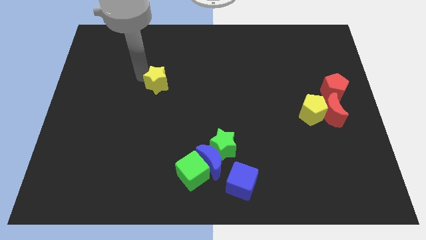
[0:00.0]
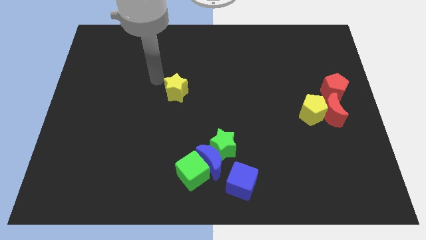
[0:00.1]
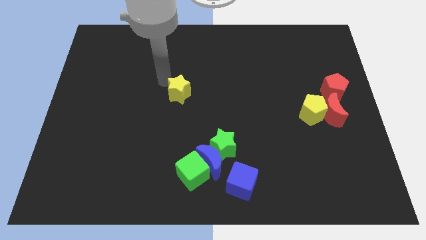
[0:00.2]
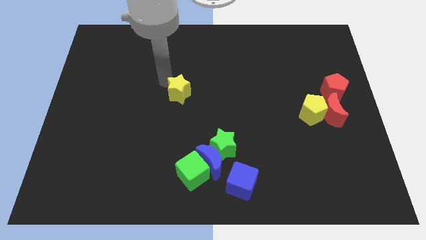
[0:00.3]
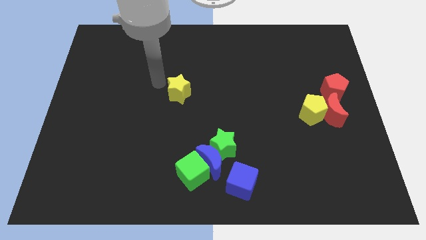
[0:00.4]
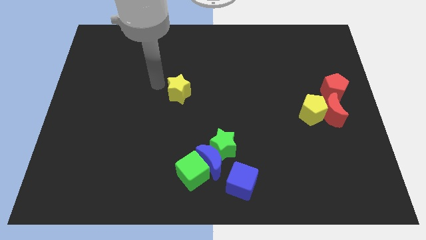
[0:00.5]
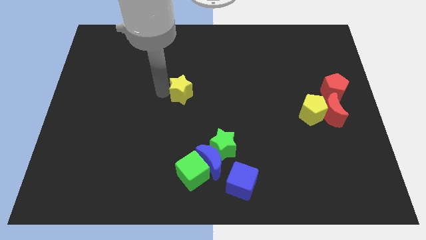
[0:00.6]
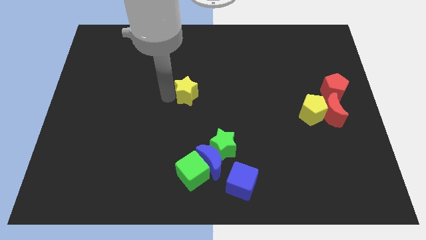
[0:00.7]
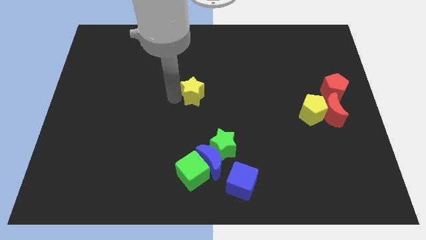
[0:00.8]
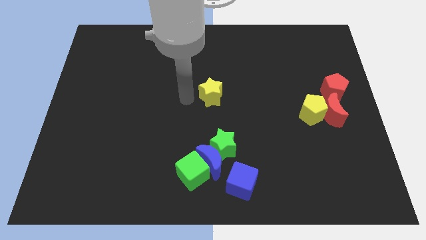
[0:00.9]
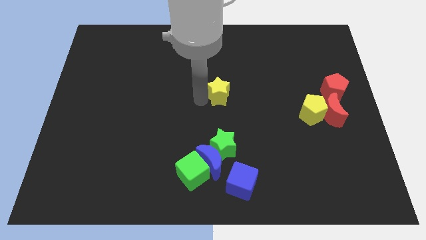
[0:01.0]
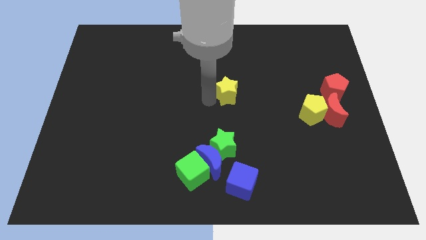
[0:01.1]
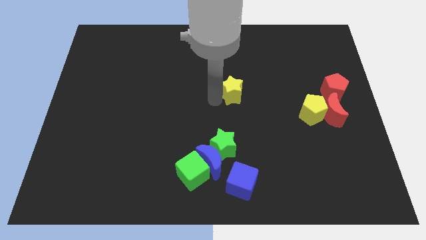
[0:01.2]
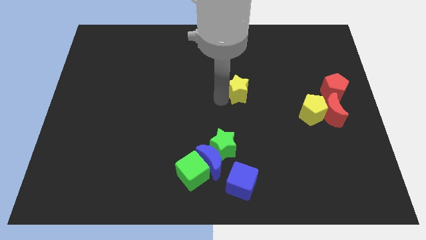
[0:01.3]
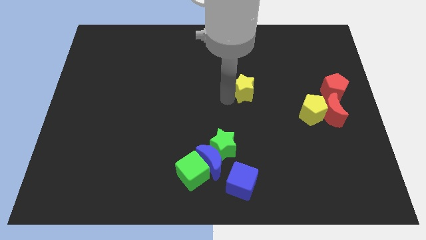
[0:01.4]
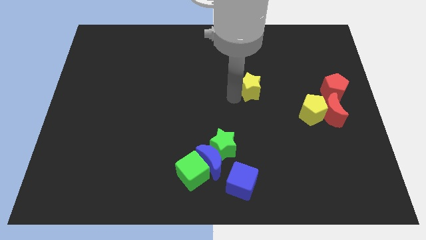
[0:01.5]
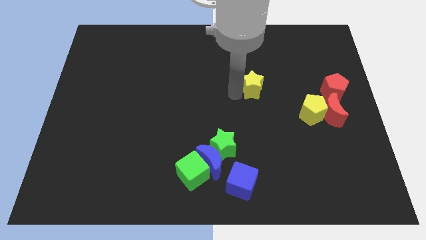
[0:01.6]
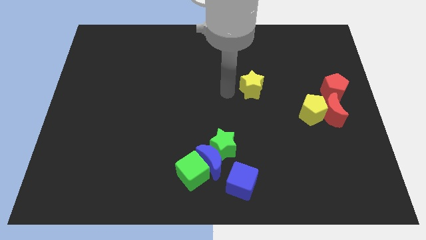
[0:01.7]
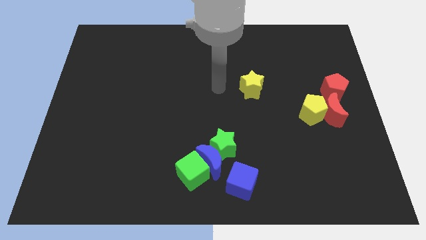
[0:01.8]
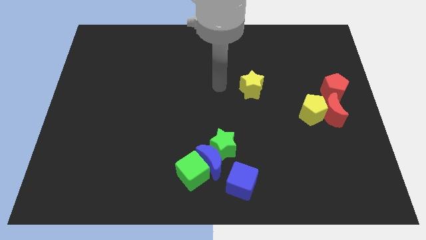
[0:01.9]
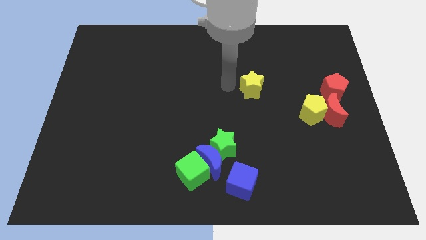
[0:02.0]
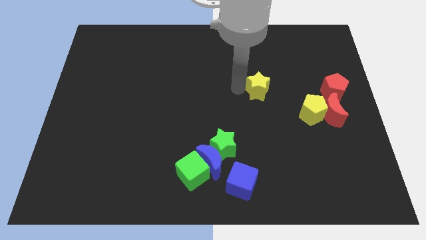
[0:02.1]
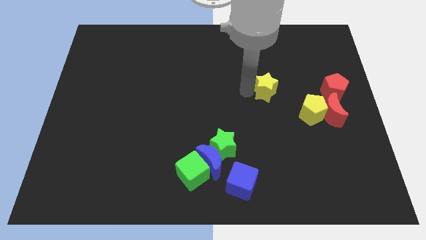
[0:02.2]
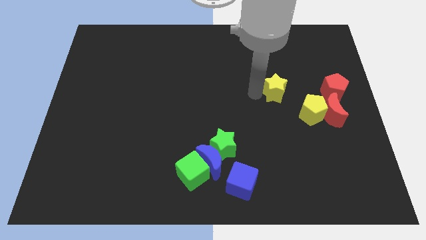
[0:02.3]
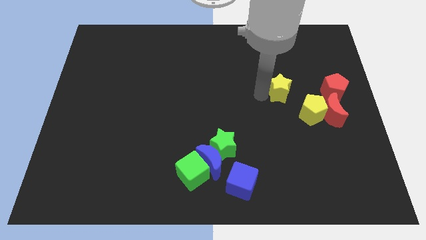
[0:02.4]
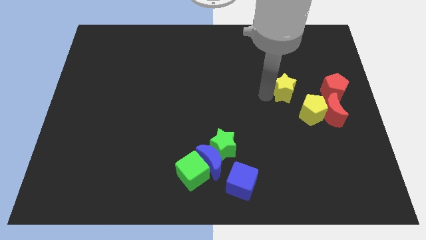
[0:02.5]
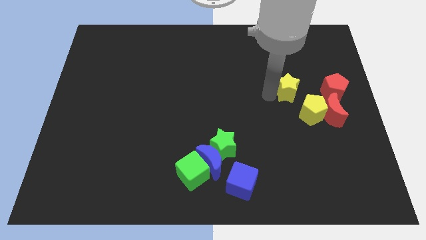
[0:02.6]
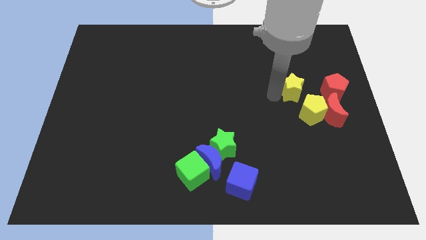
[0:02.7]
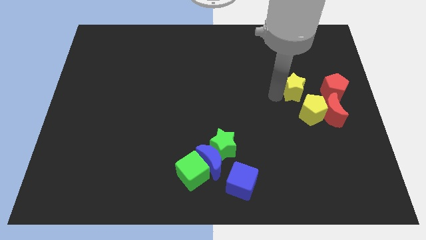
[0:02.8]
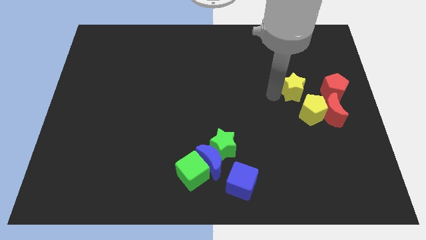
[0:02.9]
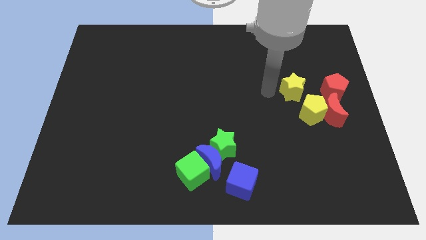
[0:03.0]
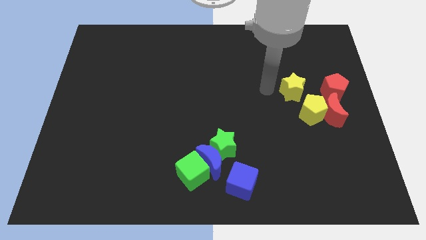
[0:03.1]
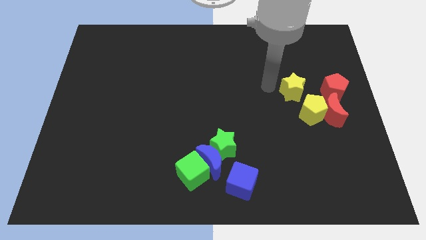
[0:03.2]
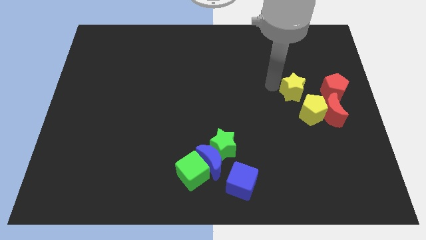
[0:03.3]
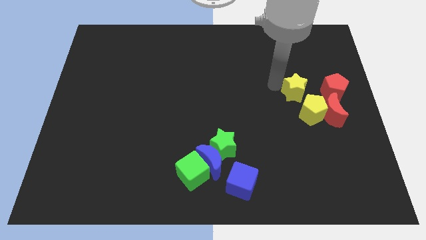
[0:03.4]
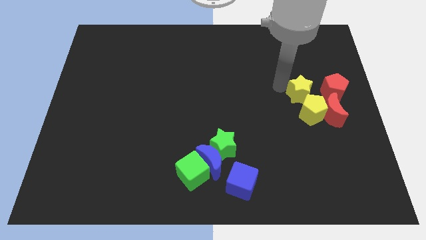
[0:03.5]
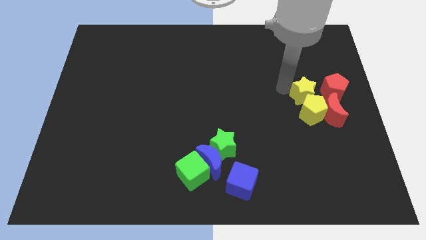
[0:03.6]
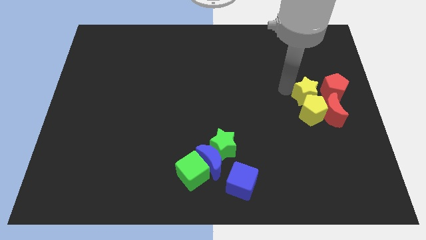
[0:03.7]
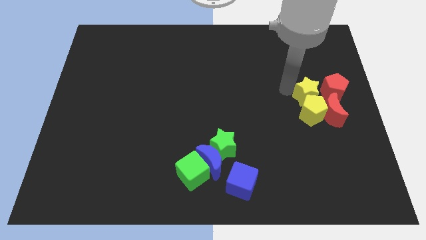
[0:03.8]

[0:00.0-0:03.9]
move the yellow star to the top of the yellow pentagon

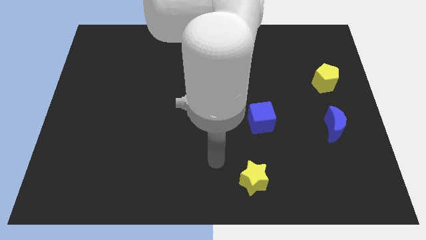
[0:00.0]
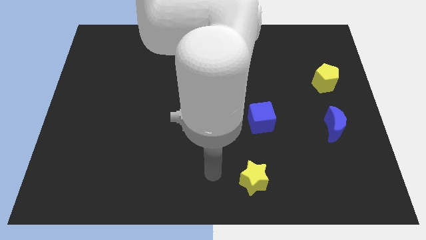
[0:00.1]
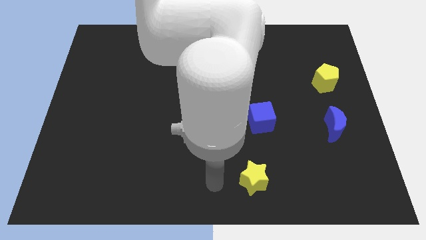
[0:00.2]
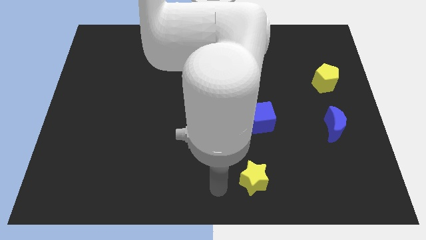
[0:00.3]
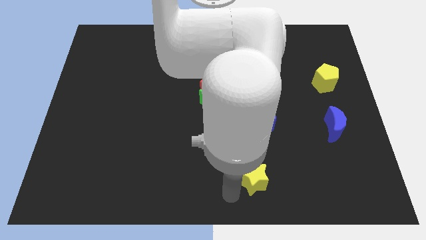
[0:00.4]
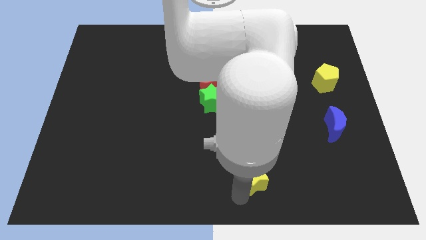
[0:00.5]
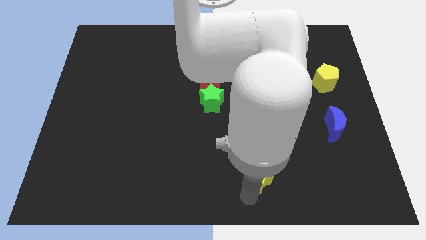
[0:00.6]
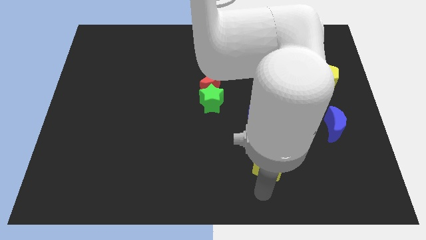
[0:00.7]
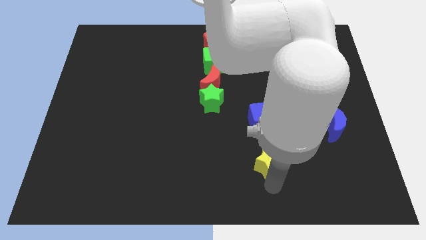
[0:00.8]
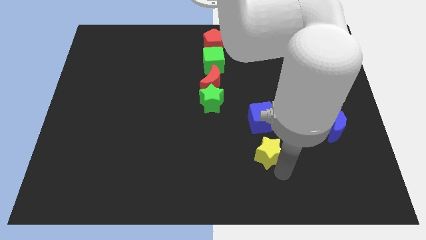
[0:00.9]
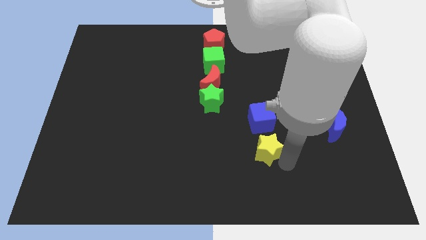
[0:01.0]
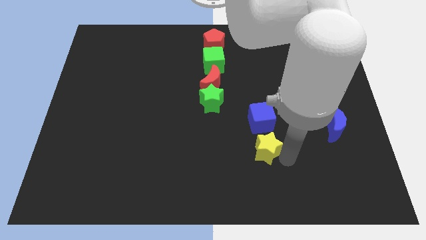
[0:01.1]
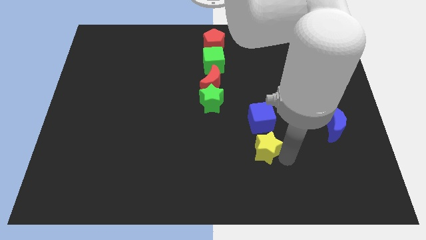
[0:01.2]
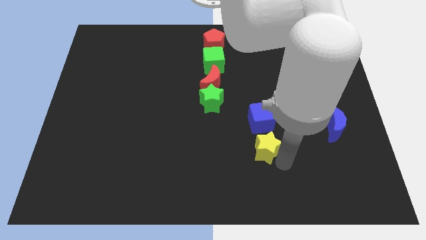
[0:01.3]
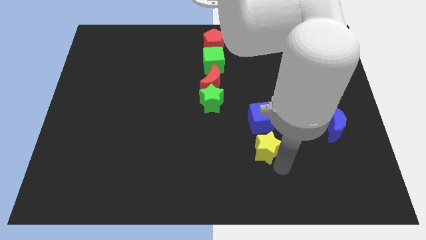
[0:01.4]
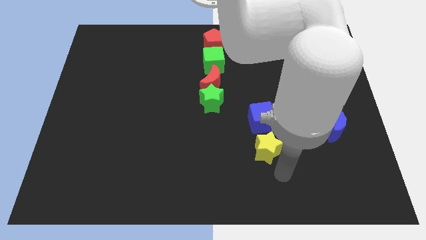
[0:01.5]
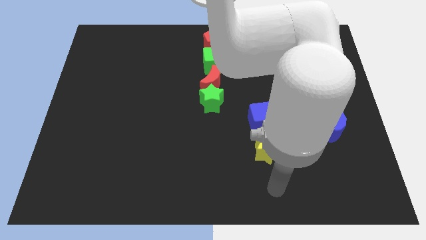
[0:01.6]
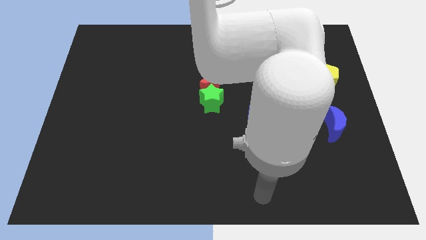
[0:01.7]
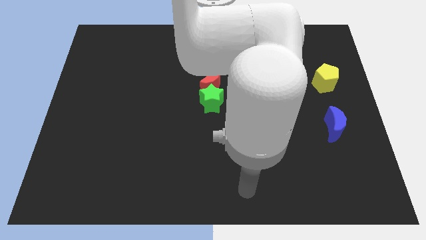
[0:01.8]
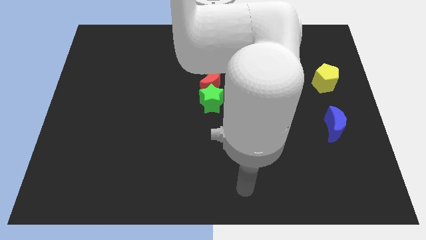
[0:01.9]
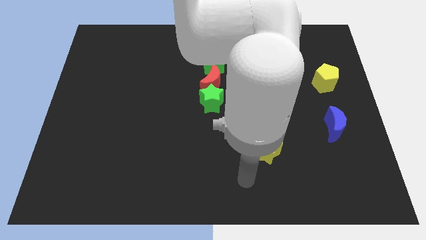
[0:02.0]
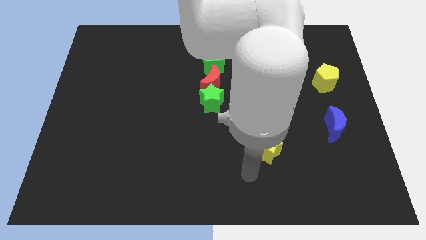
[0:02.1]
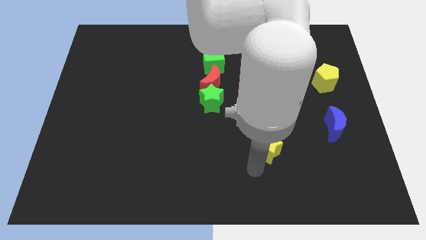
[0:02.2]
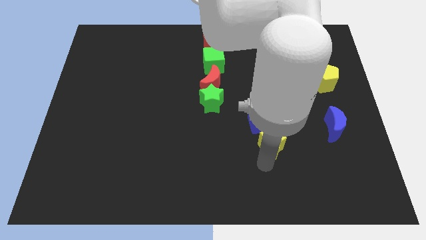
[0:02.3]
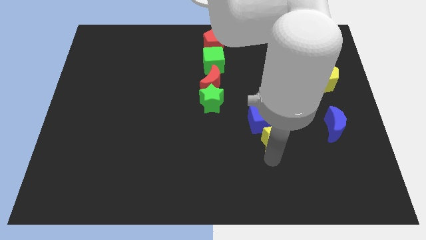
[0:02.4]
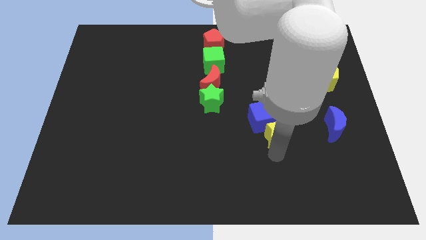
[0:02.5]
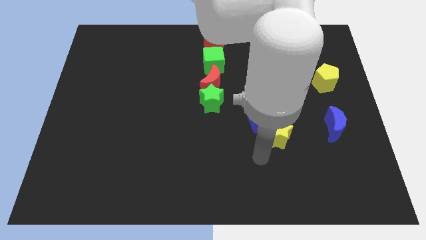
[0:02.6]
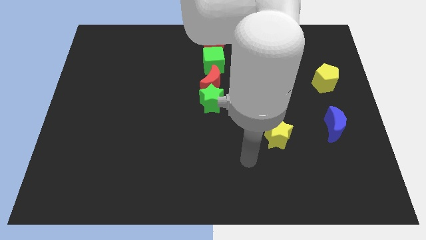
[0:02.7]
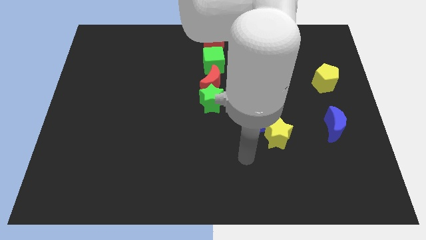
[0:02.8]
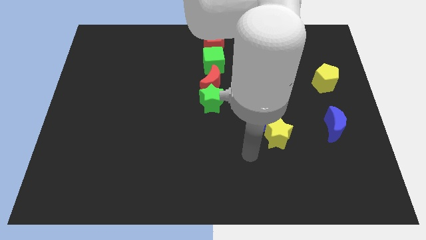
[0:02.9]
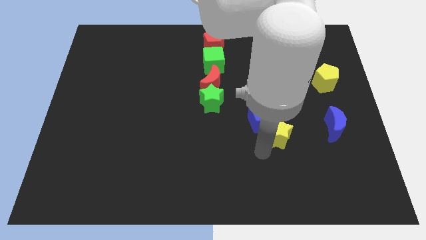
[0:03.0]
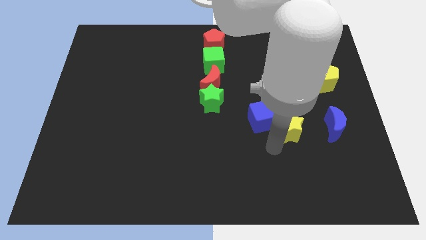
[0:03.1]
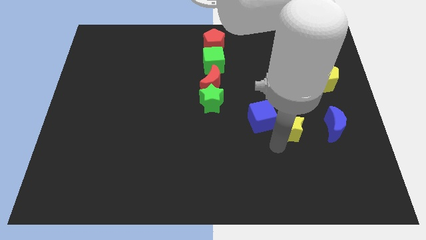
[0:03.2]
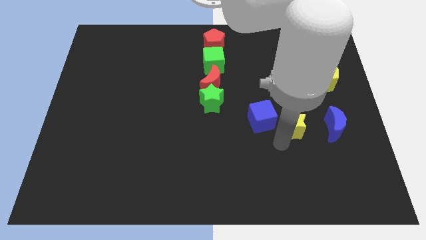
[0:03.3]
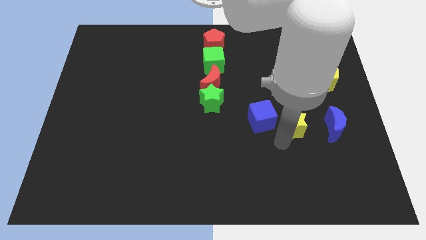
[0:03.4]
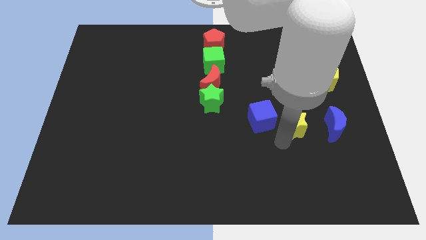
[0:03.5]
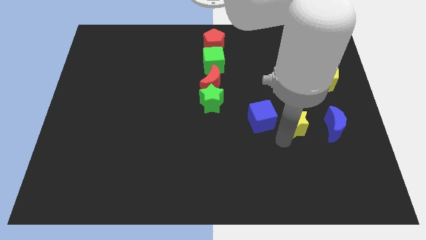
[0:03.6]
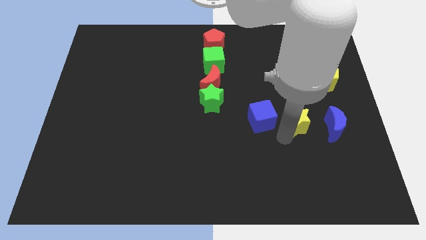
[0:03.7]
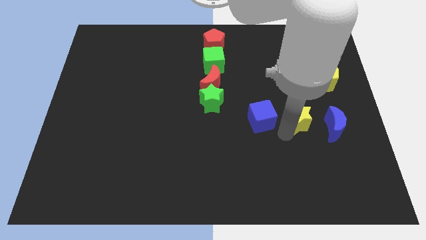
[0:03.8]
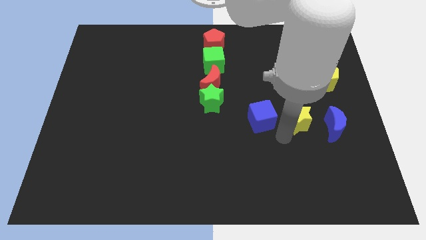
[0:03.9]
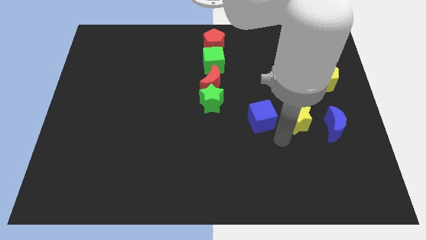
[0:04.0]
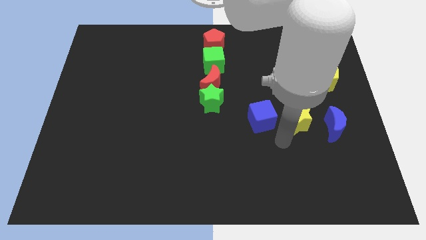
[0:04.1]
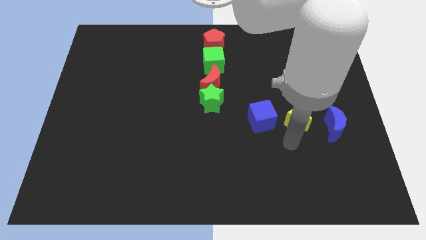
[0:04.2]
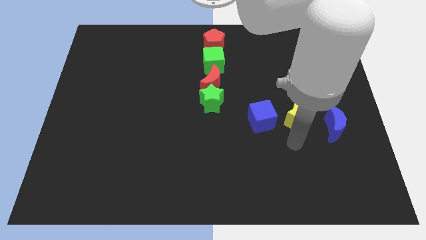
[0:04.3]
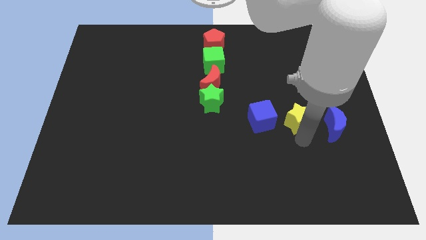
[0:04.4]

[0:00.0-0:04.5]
move the yellow star to the right of the blue cube

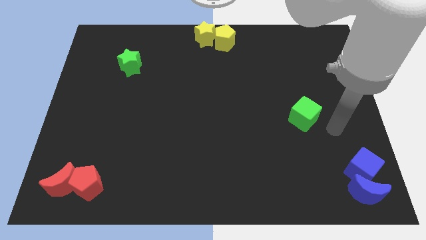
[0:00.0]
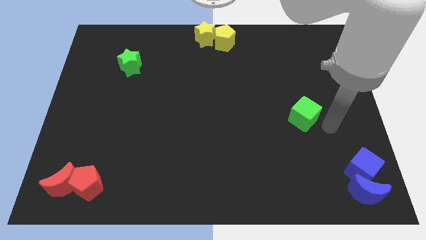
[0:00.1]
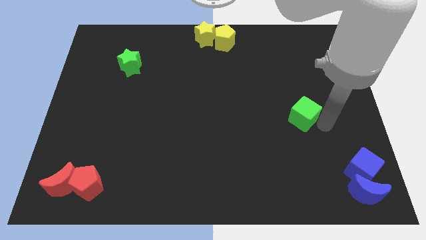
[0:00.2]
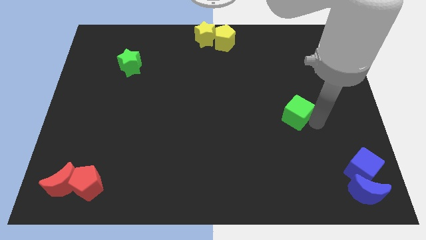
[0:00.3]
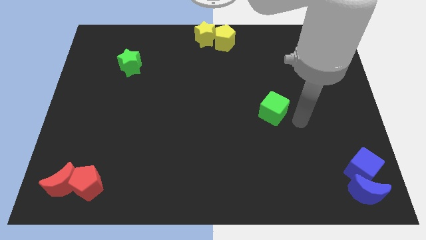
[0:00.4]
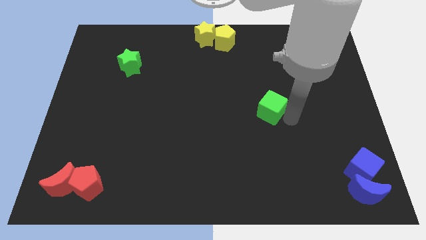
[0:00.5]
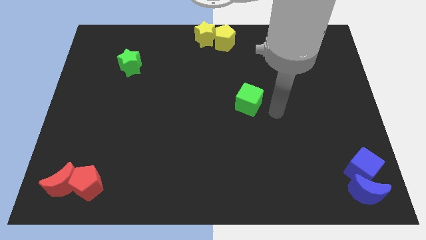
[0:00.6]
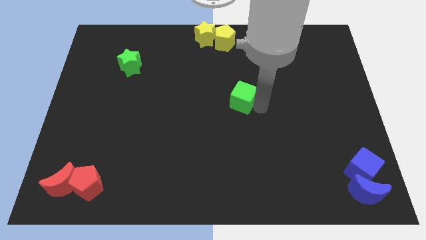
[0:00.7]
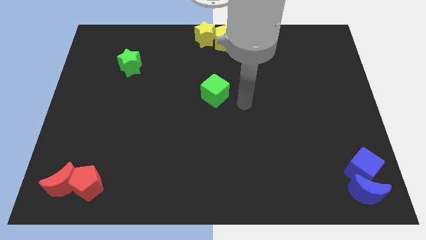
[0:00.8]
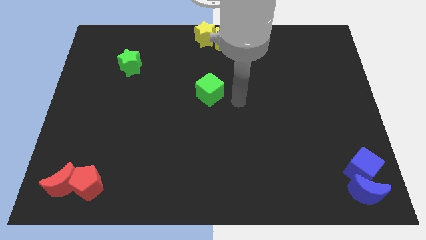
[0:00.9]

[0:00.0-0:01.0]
push green cube below yellow star
